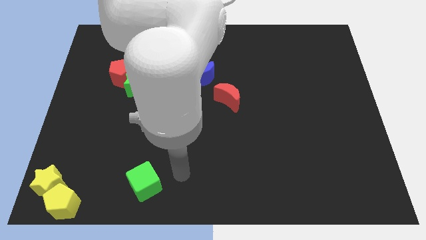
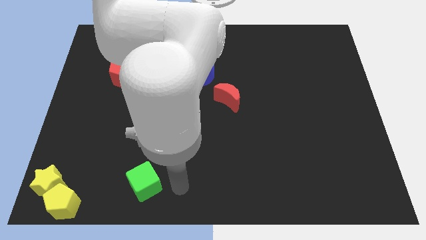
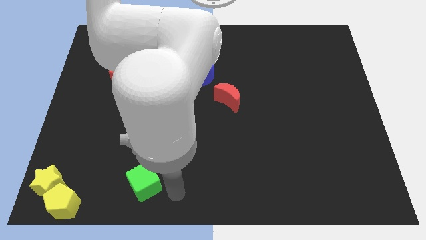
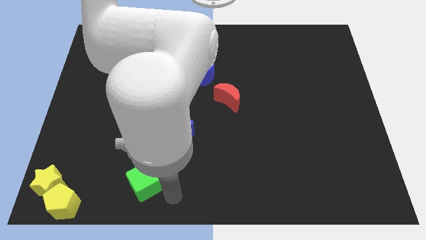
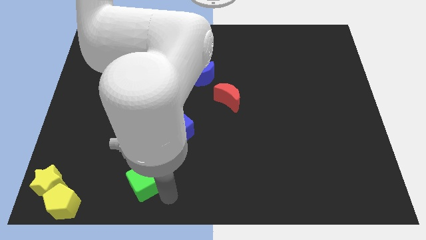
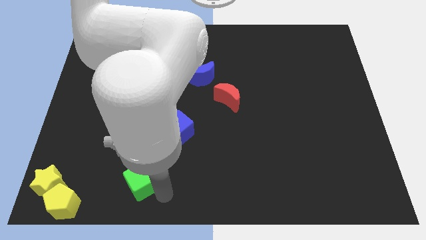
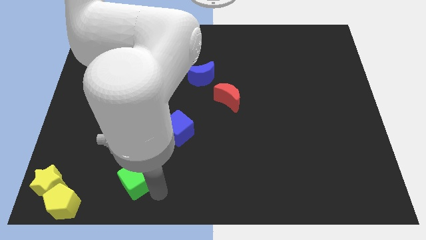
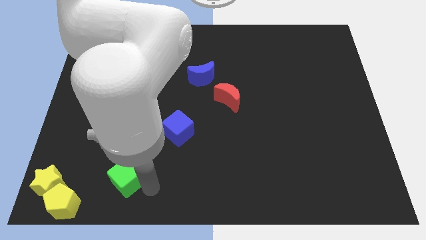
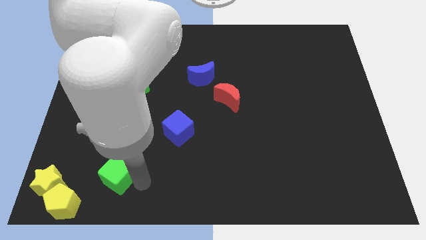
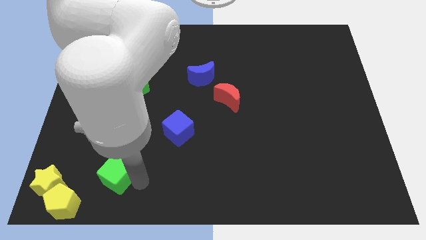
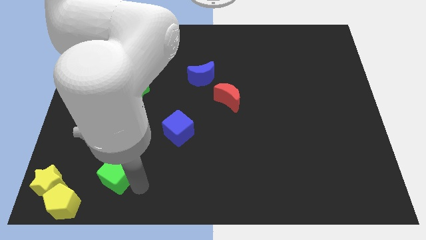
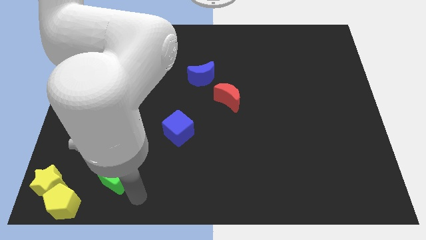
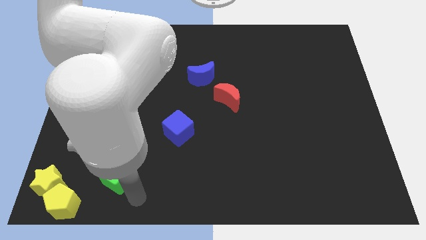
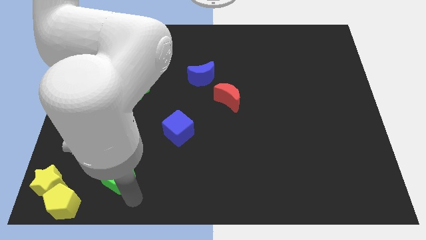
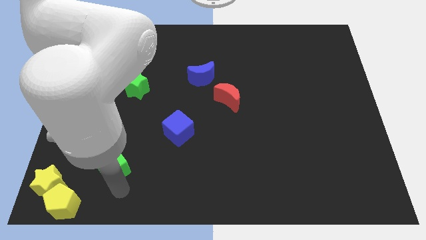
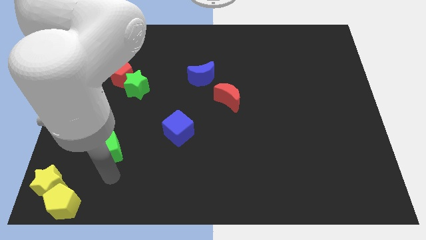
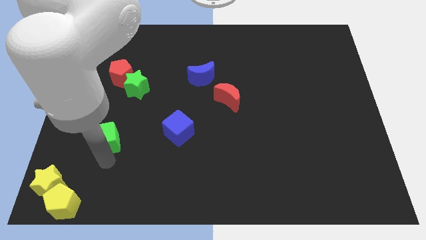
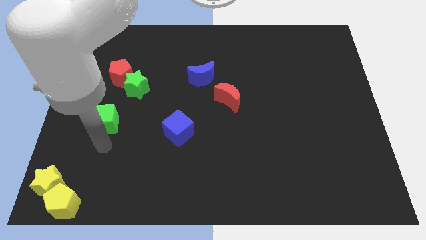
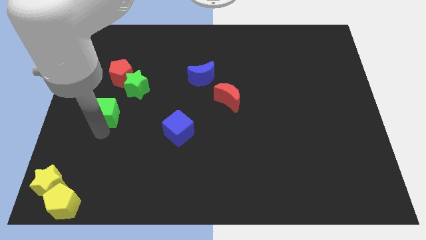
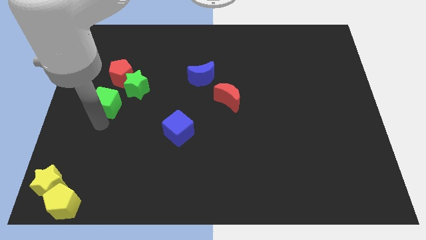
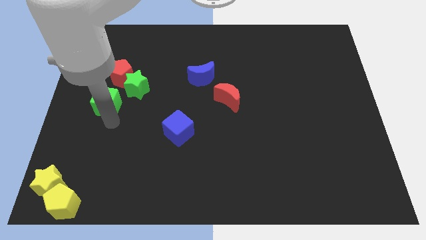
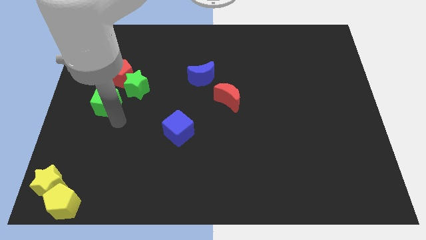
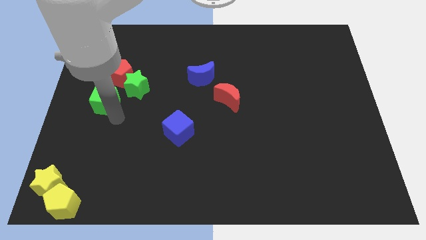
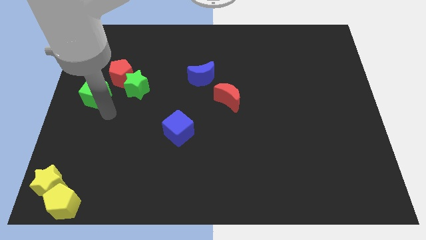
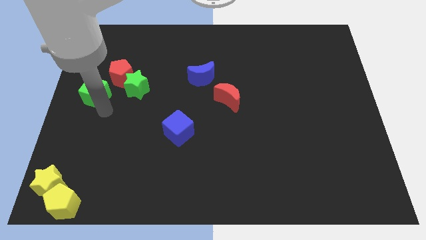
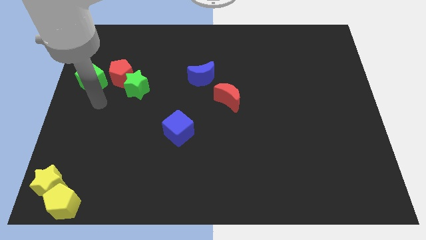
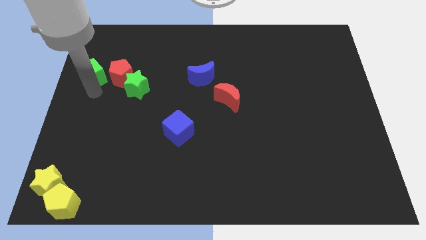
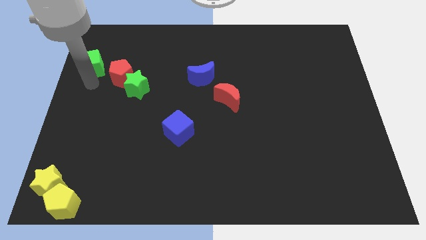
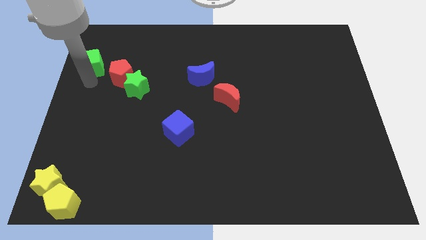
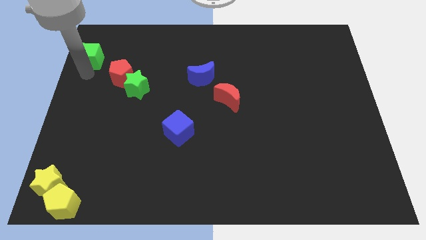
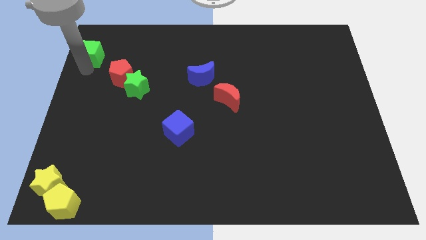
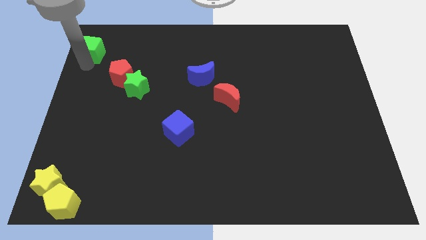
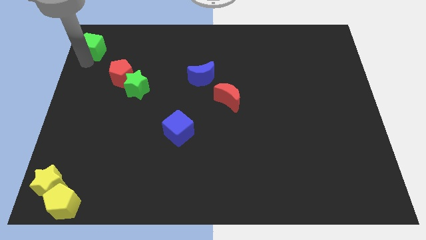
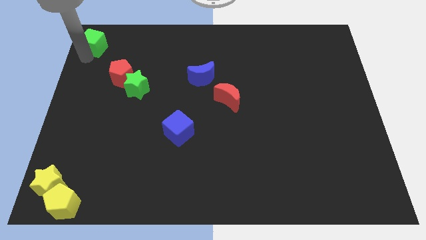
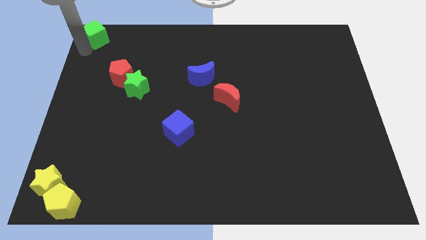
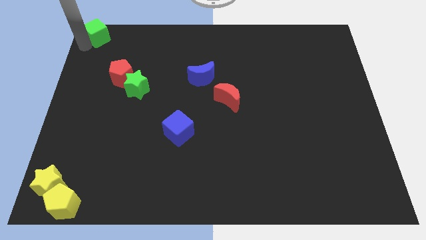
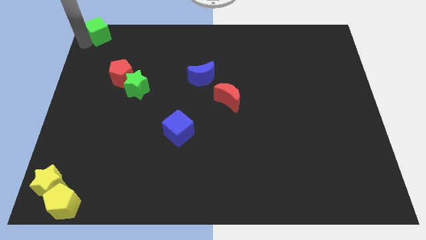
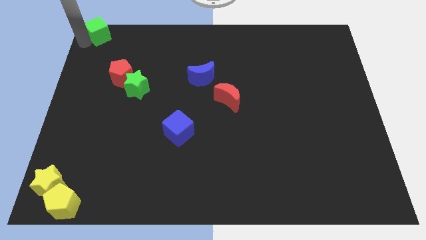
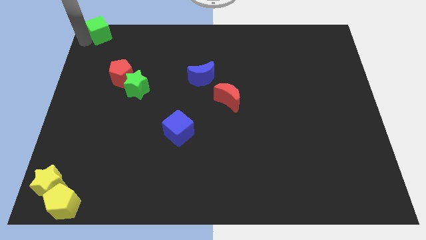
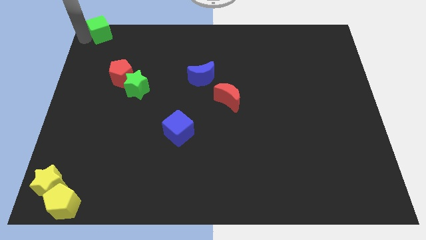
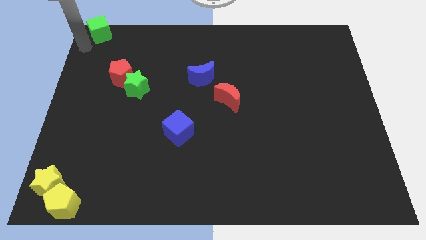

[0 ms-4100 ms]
move the green cube to the top left

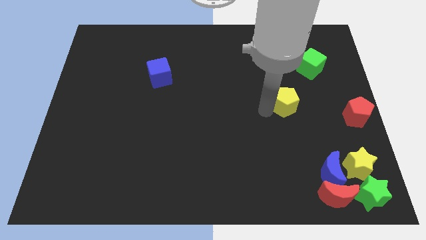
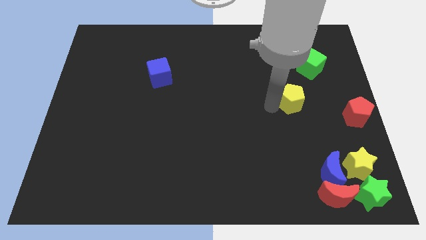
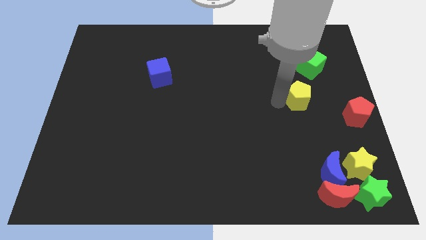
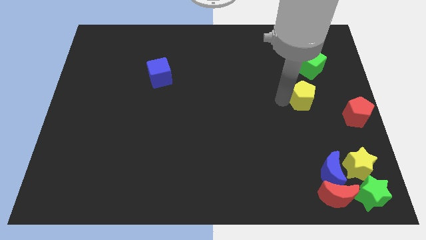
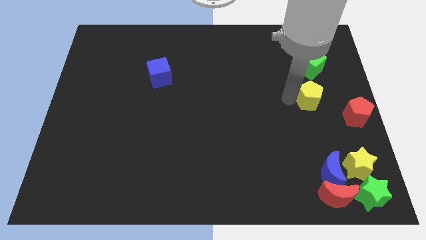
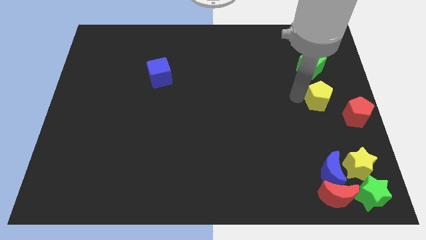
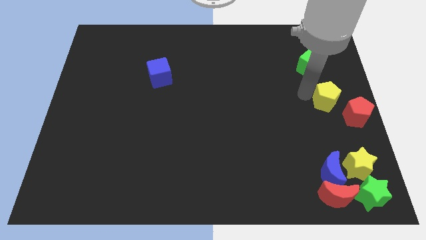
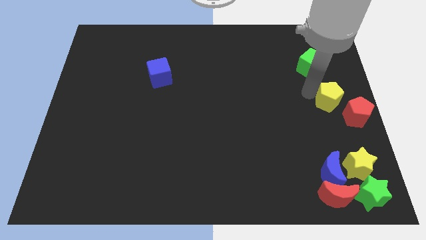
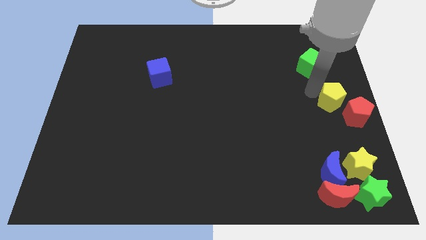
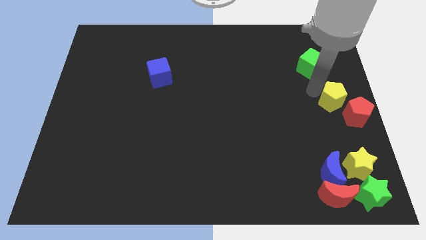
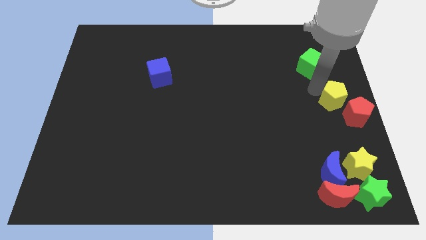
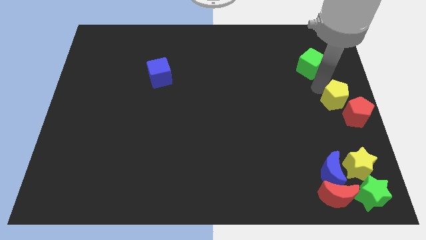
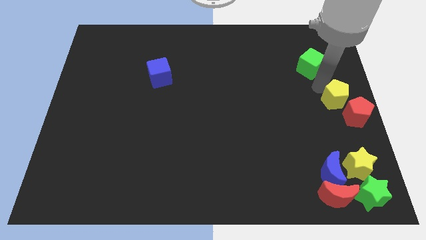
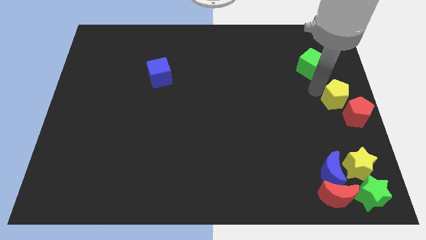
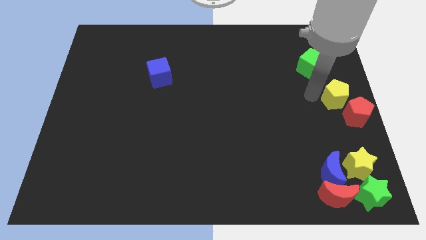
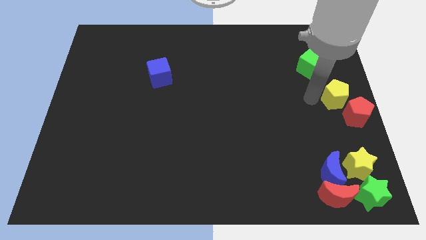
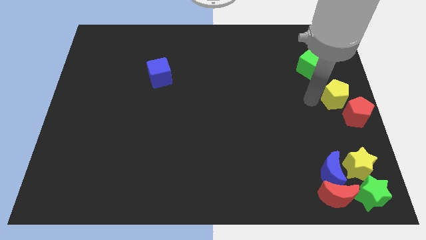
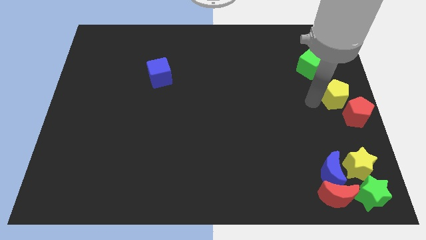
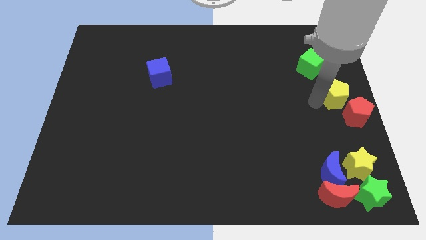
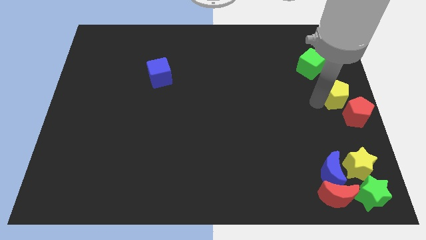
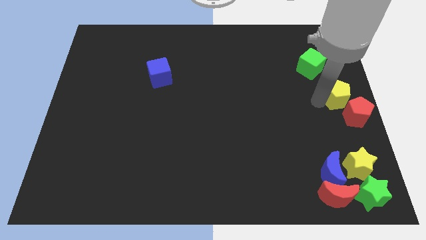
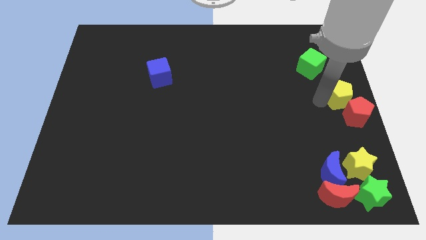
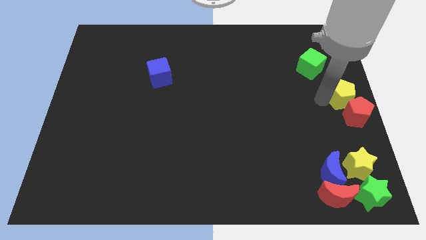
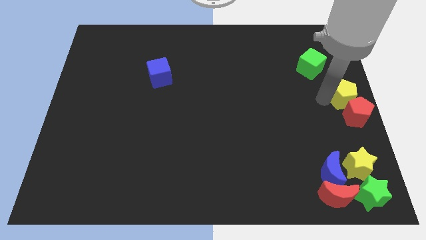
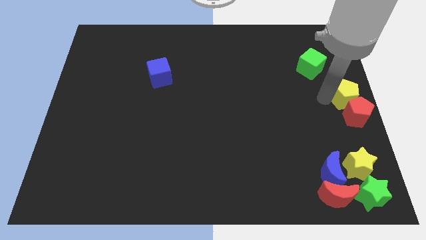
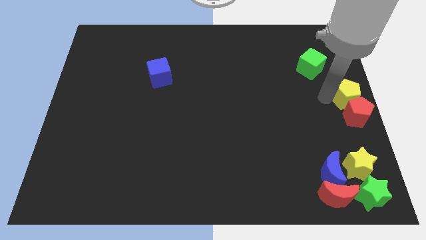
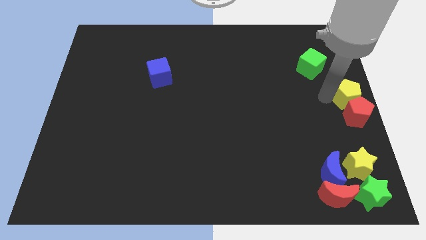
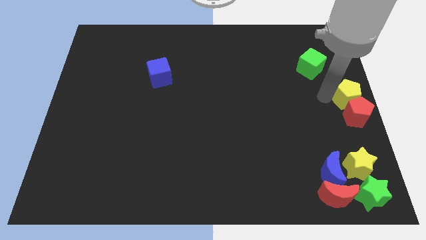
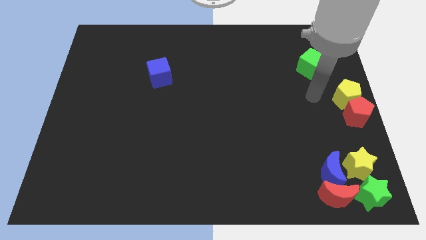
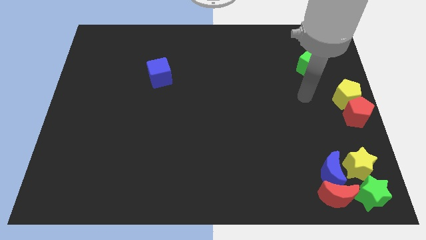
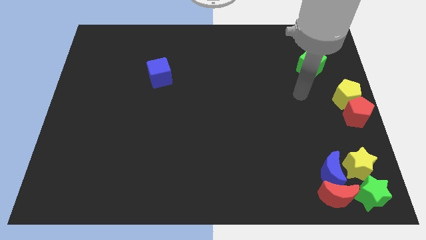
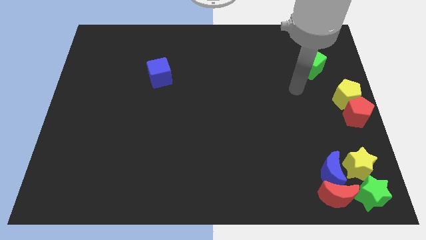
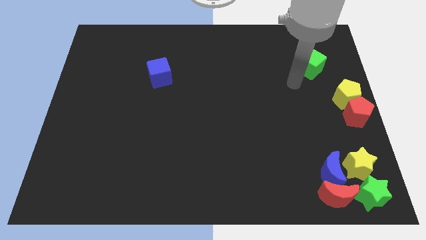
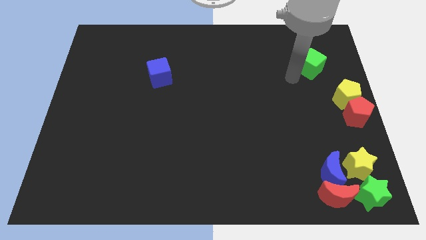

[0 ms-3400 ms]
move the yellow pentagon towards the top of the red pentagon

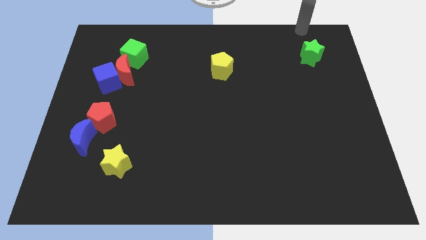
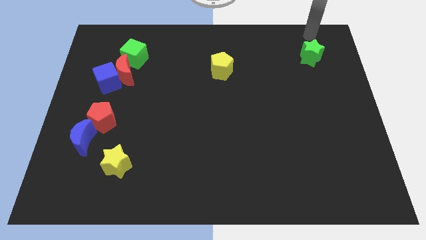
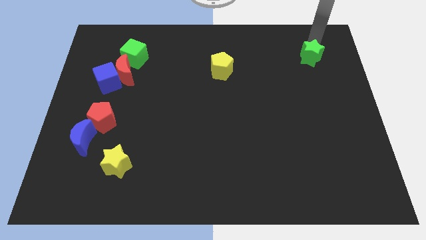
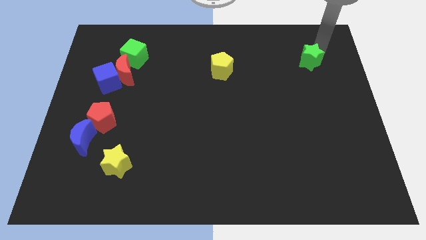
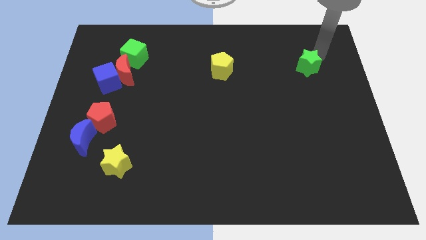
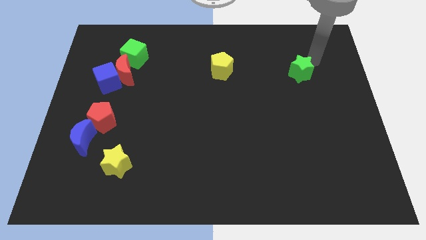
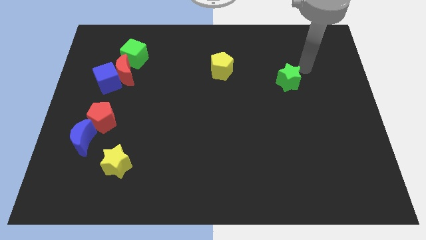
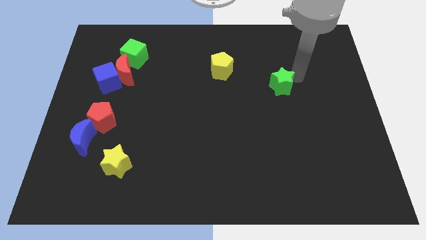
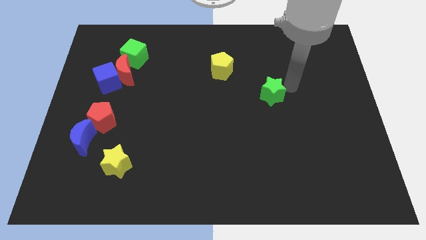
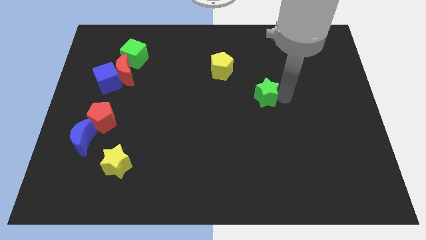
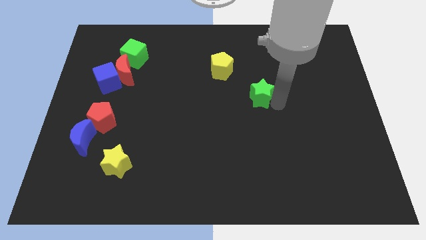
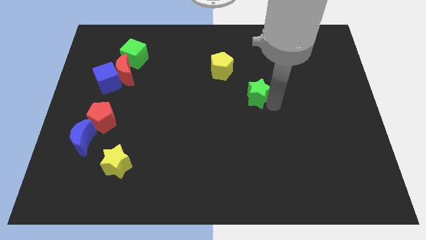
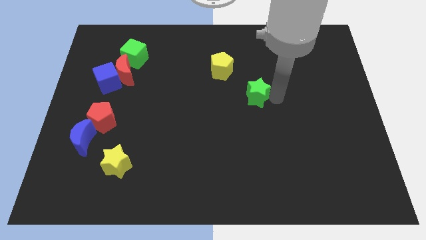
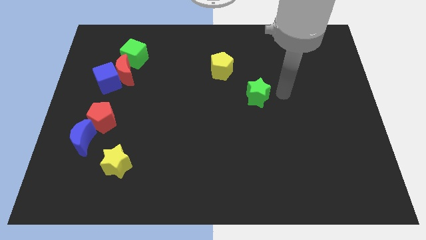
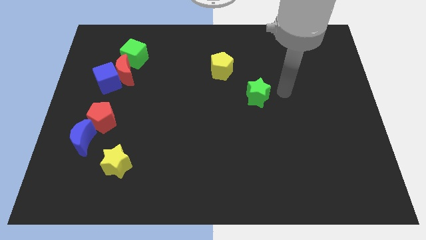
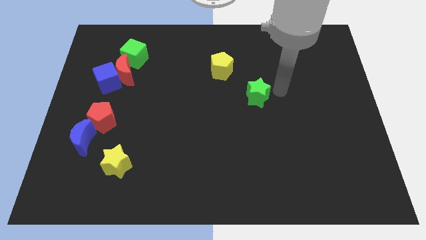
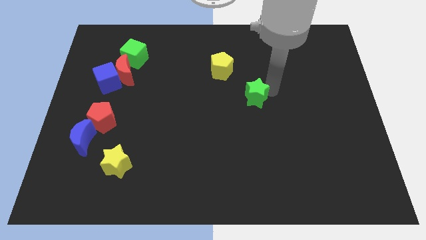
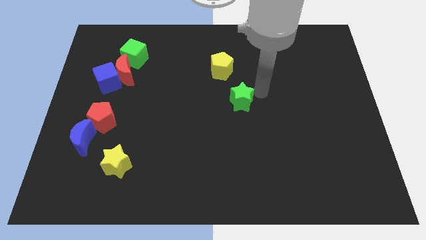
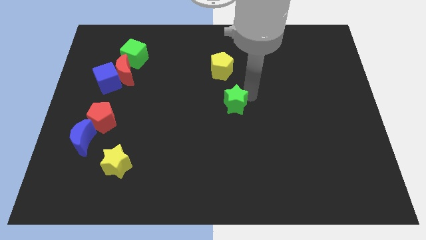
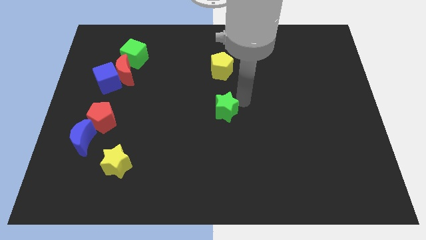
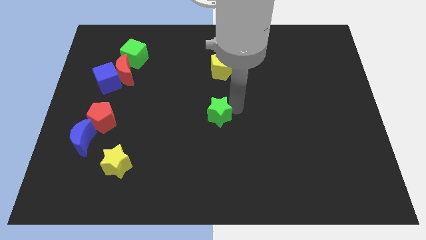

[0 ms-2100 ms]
move the green star below yellow pentagon
